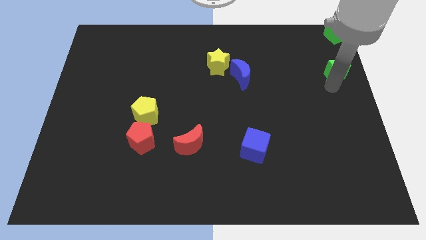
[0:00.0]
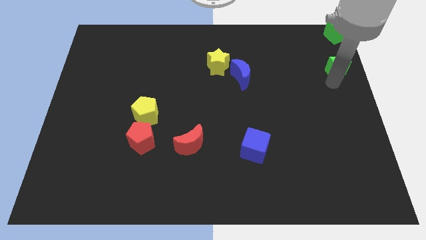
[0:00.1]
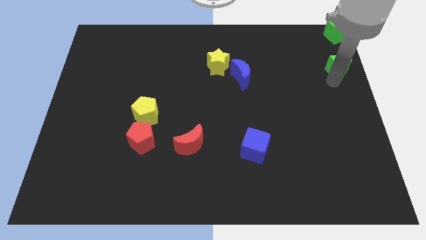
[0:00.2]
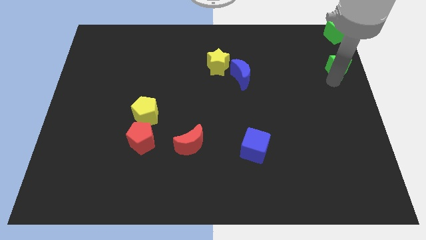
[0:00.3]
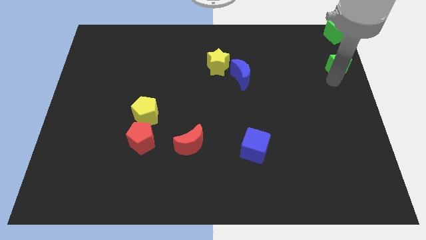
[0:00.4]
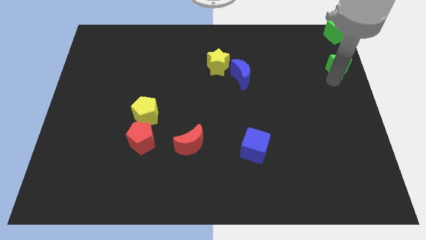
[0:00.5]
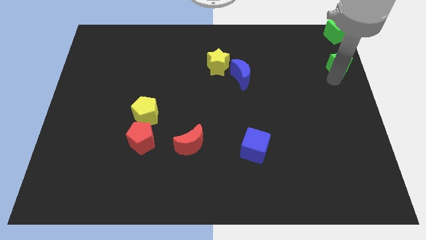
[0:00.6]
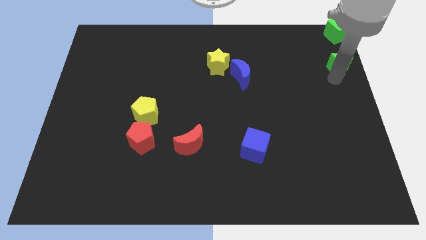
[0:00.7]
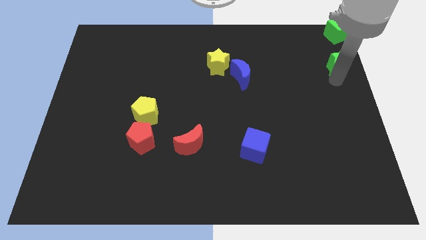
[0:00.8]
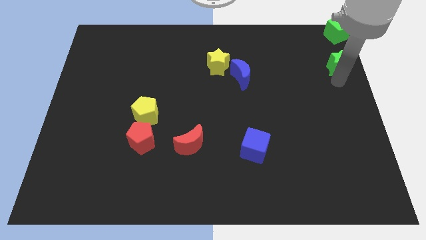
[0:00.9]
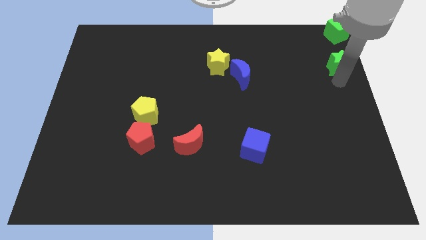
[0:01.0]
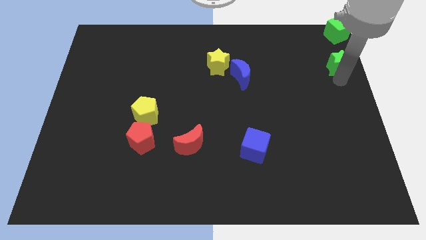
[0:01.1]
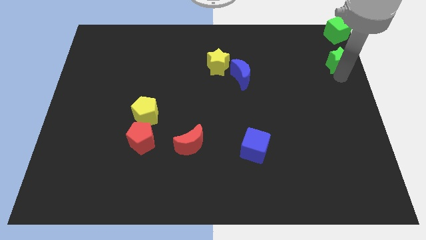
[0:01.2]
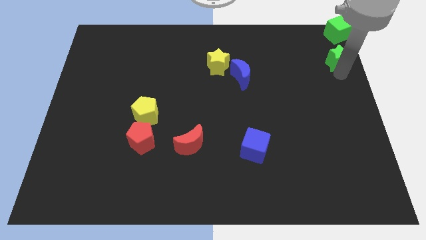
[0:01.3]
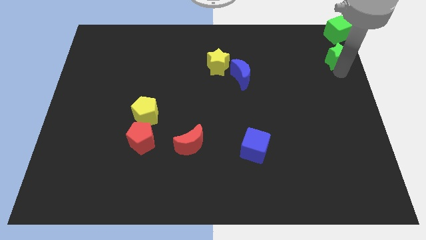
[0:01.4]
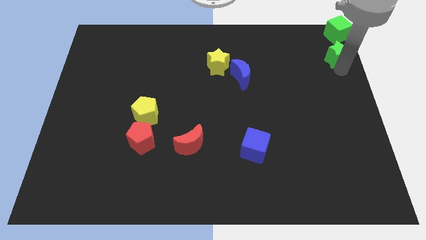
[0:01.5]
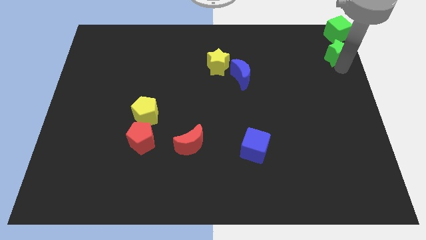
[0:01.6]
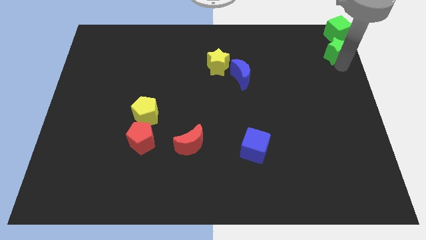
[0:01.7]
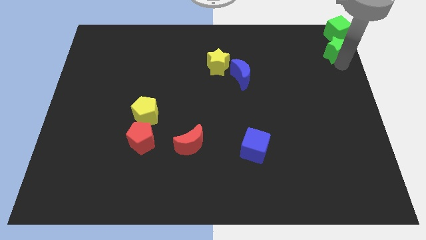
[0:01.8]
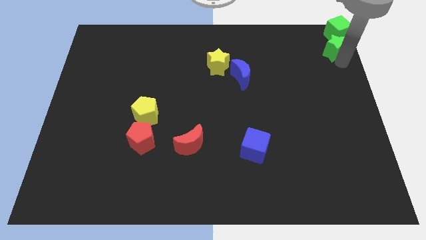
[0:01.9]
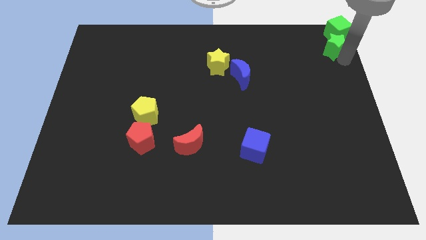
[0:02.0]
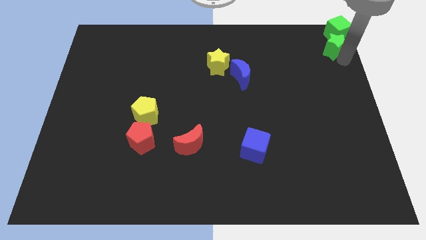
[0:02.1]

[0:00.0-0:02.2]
move the green star to the bottom of the green cube

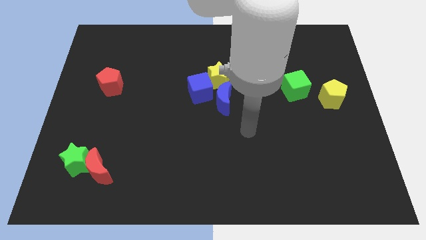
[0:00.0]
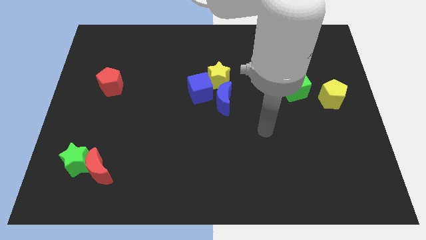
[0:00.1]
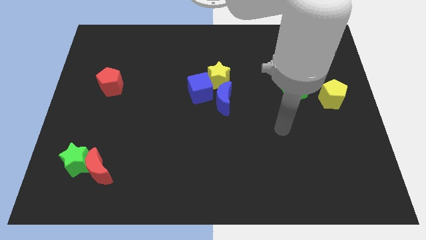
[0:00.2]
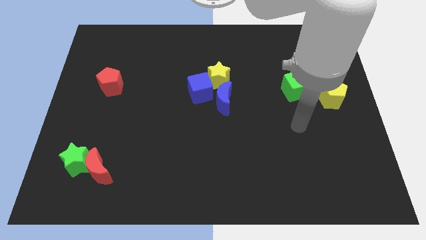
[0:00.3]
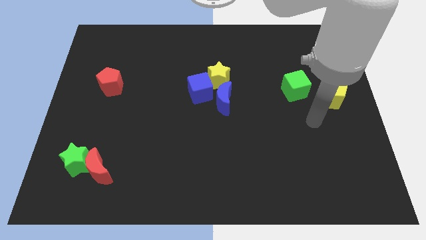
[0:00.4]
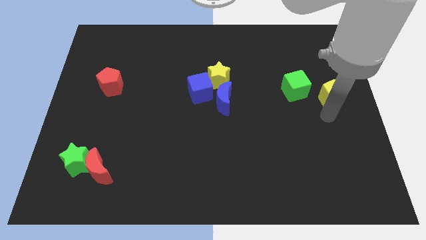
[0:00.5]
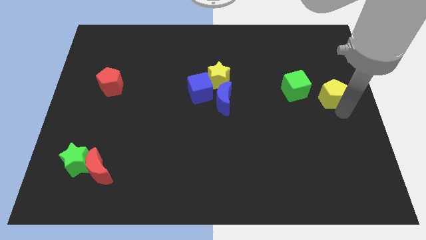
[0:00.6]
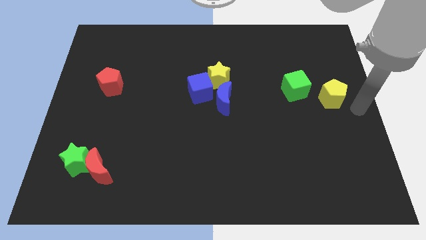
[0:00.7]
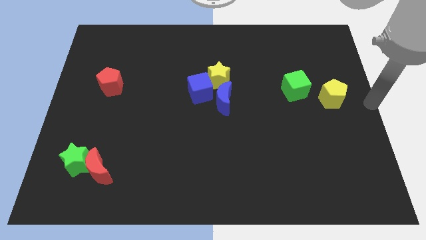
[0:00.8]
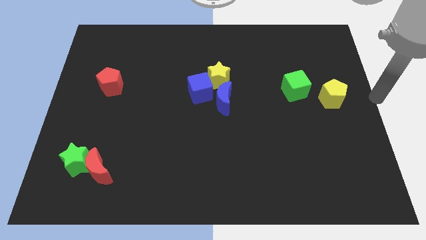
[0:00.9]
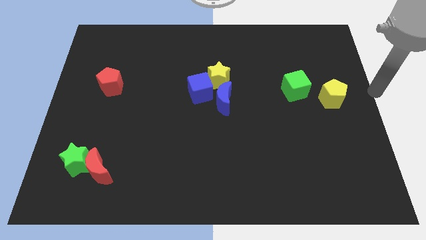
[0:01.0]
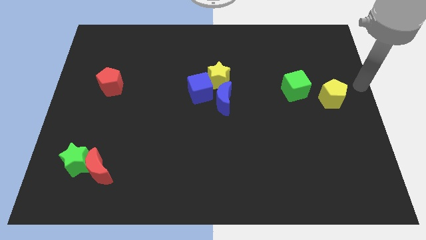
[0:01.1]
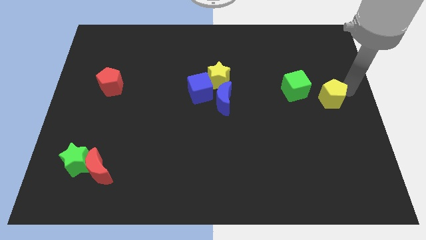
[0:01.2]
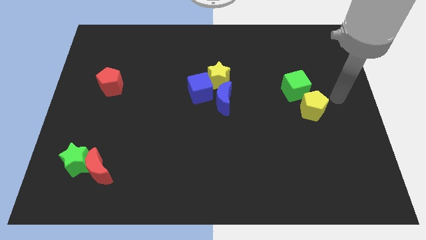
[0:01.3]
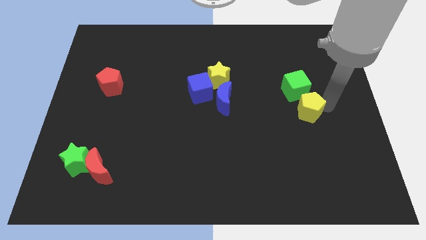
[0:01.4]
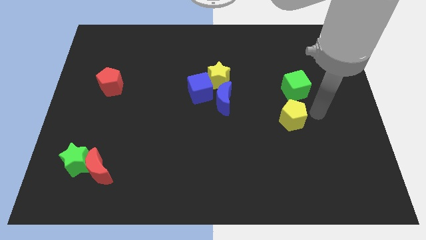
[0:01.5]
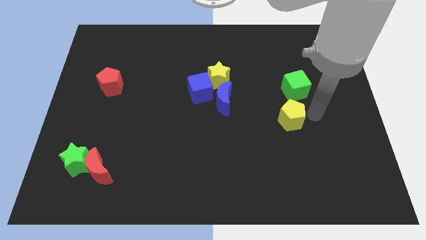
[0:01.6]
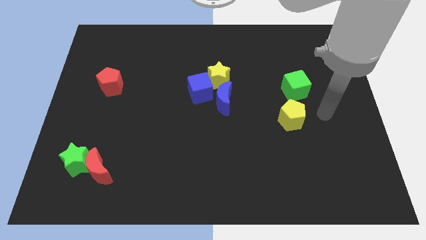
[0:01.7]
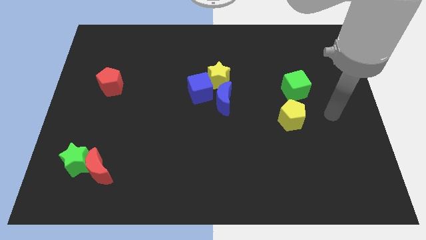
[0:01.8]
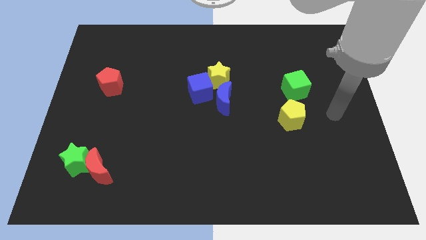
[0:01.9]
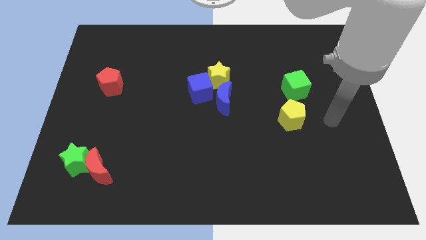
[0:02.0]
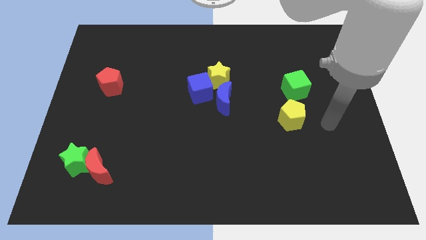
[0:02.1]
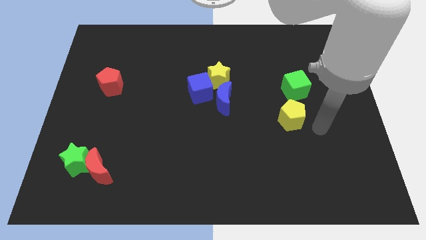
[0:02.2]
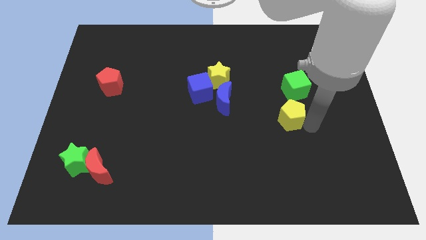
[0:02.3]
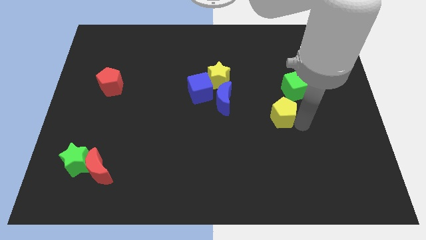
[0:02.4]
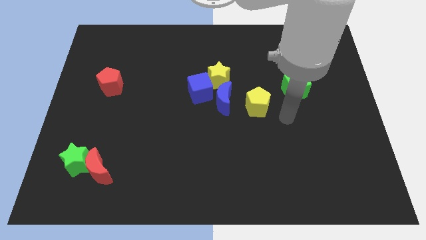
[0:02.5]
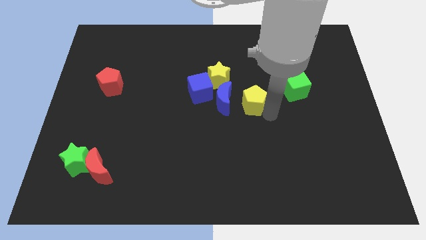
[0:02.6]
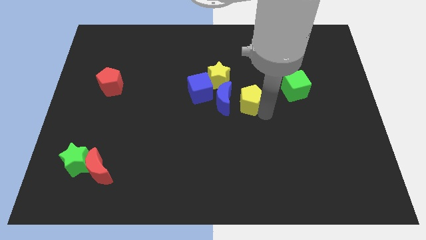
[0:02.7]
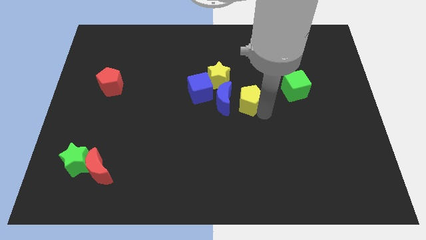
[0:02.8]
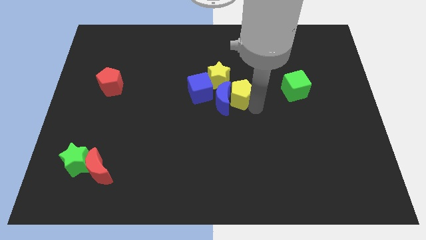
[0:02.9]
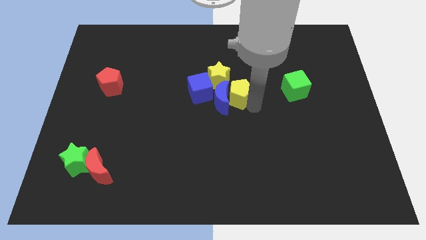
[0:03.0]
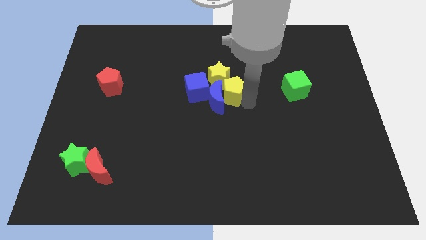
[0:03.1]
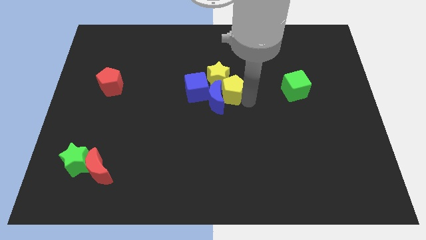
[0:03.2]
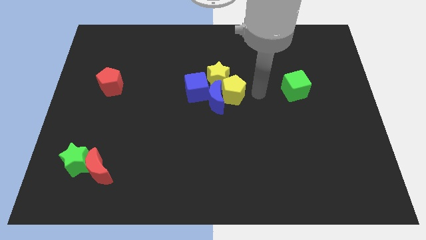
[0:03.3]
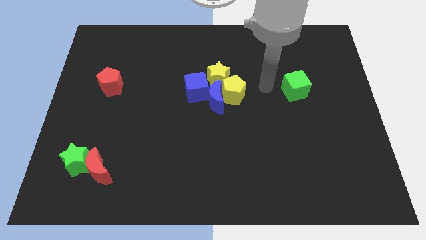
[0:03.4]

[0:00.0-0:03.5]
push the yellow pentagon into the blue moon

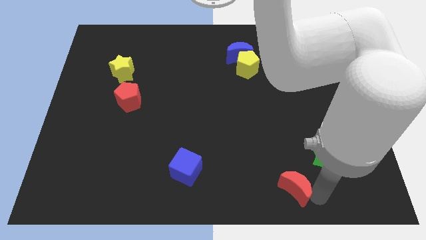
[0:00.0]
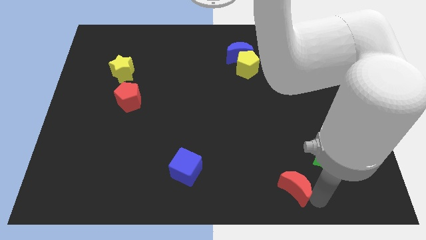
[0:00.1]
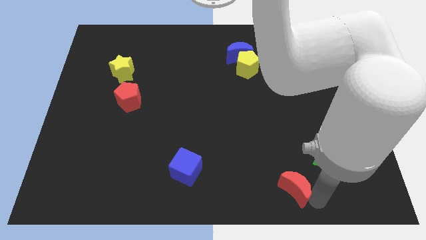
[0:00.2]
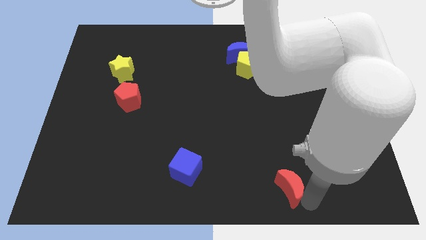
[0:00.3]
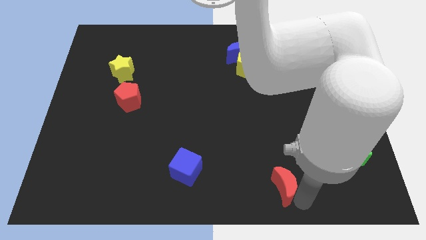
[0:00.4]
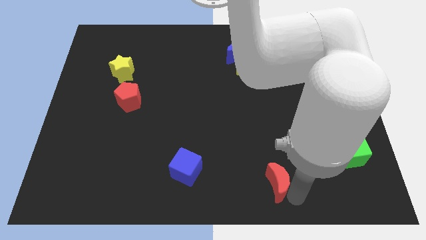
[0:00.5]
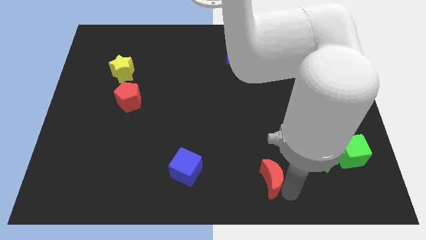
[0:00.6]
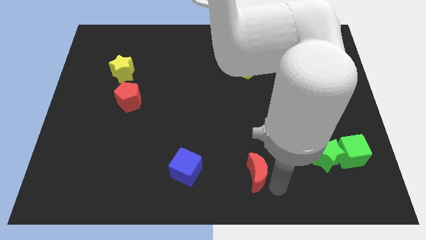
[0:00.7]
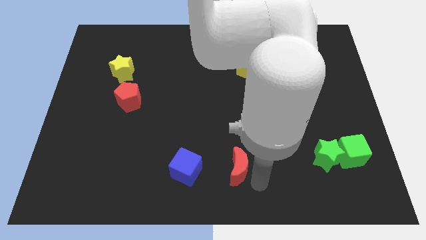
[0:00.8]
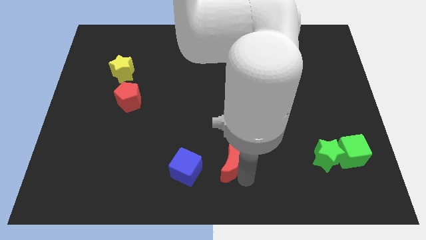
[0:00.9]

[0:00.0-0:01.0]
move red crescent right to the blue cube

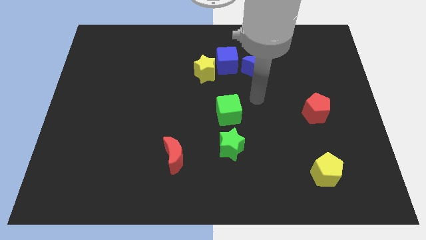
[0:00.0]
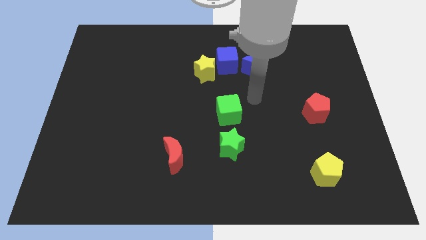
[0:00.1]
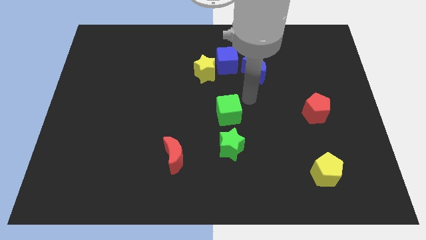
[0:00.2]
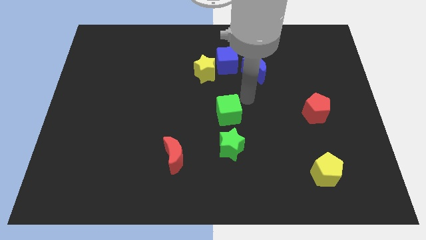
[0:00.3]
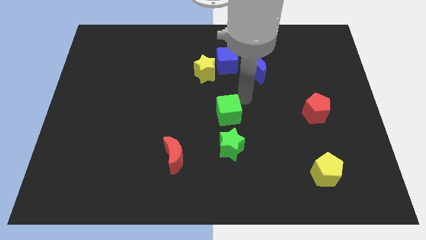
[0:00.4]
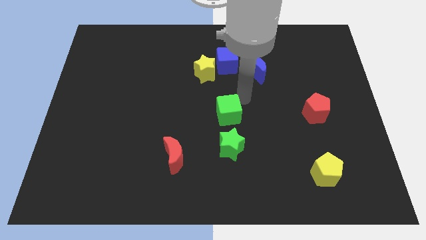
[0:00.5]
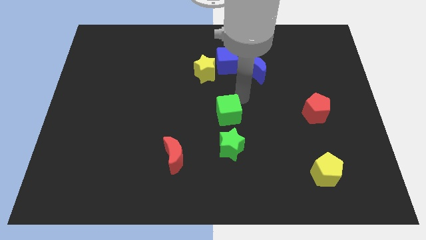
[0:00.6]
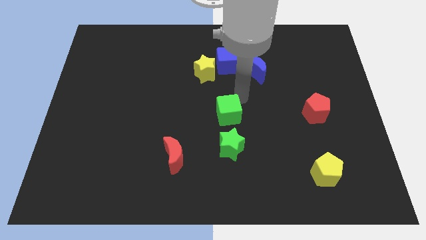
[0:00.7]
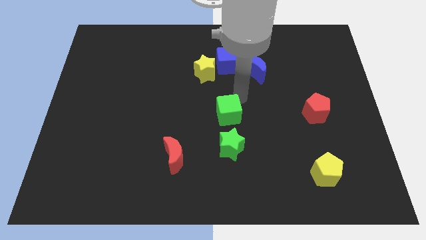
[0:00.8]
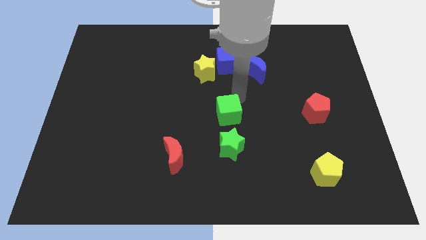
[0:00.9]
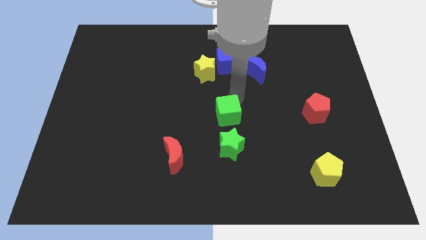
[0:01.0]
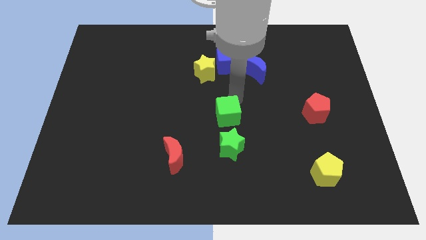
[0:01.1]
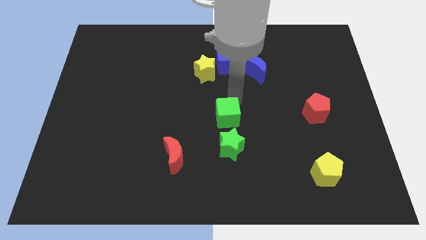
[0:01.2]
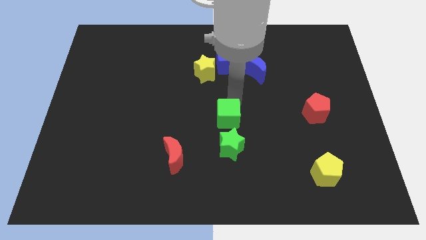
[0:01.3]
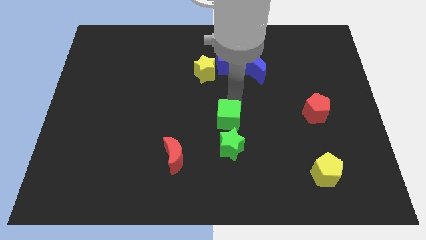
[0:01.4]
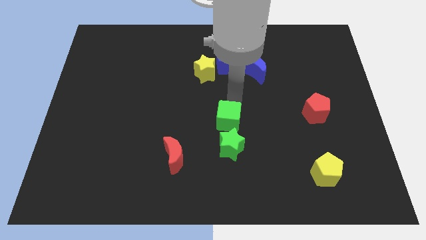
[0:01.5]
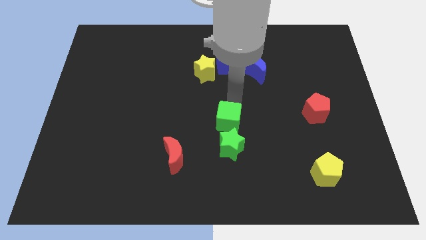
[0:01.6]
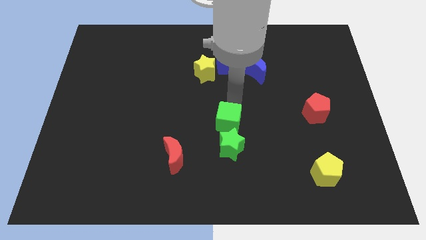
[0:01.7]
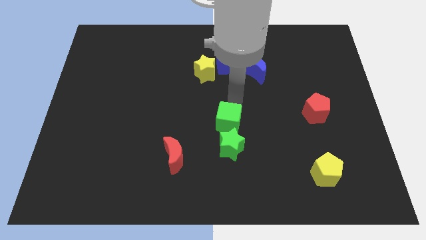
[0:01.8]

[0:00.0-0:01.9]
push the green cube in to the green star

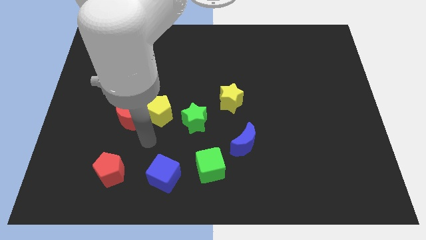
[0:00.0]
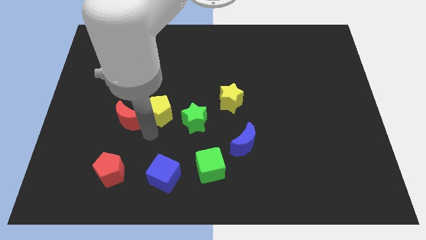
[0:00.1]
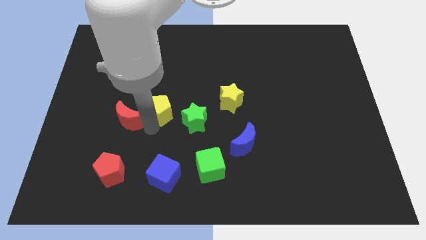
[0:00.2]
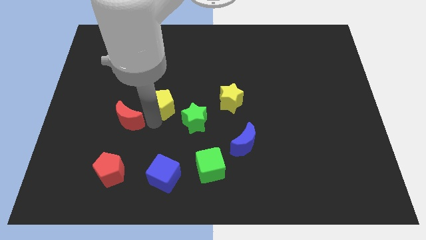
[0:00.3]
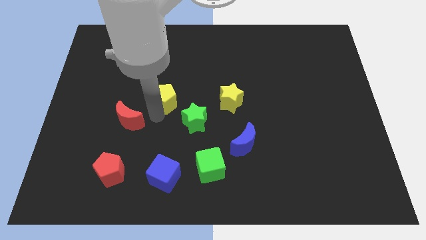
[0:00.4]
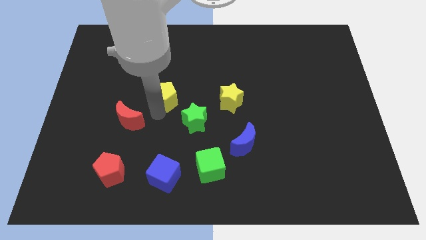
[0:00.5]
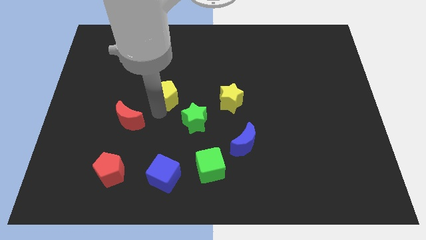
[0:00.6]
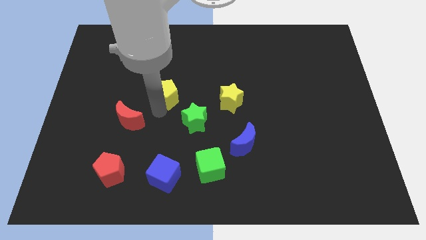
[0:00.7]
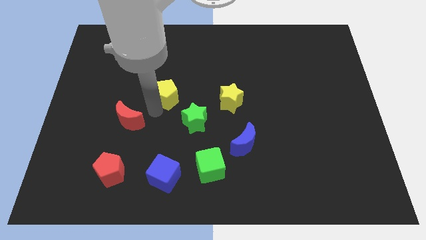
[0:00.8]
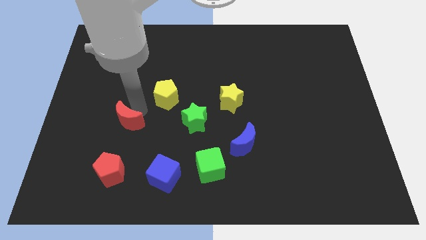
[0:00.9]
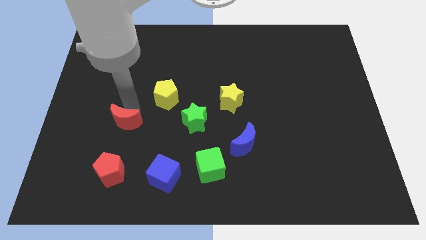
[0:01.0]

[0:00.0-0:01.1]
separate yellow pentagon and red moon
